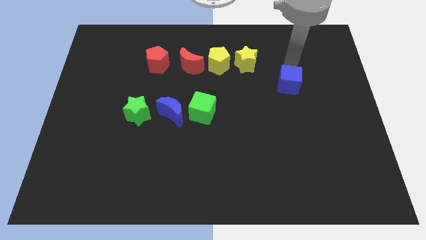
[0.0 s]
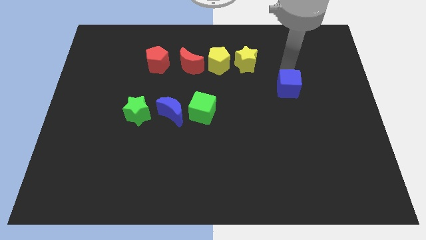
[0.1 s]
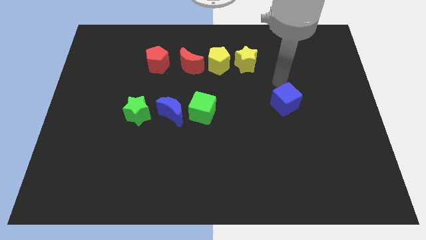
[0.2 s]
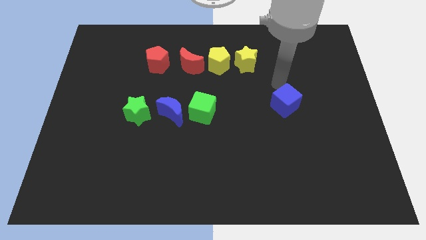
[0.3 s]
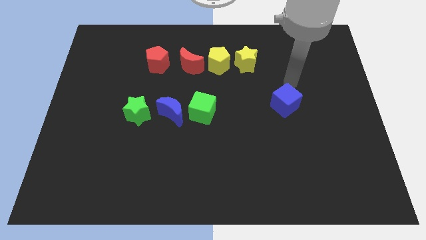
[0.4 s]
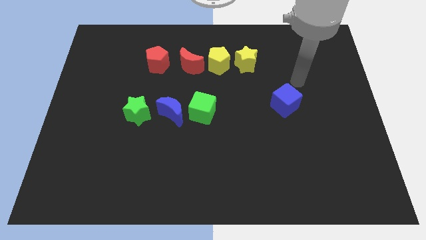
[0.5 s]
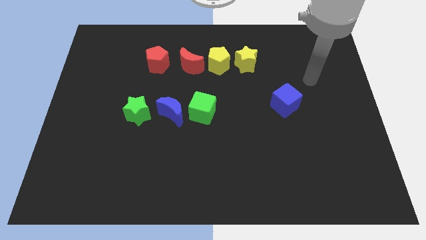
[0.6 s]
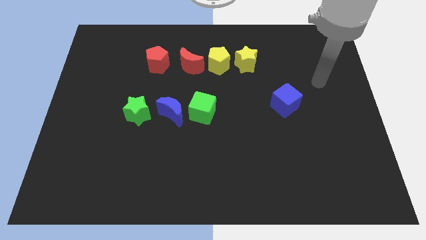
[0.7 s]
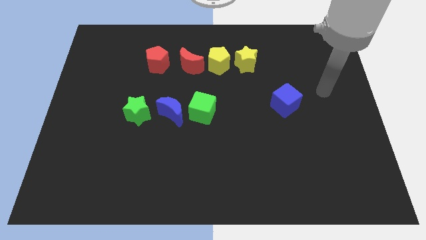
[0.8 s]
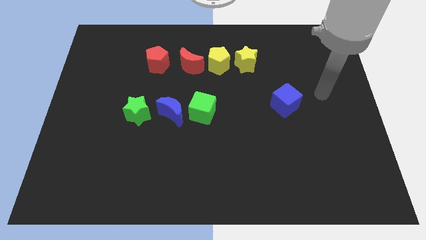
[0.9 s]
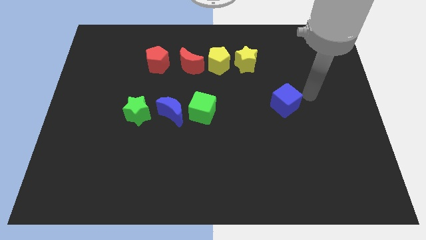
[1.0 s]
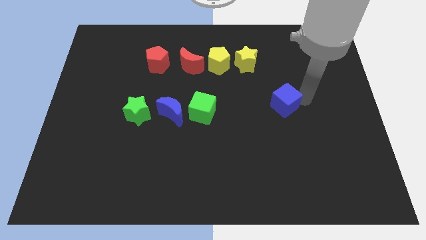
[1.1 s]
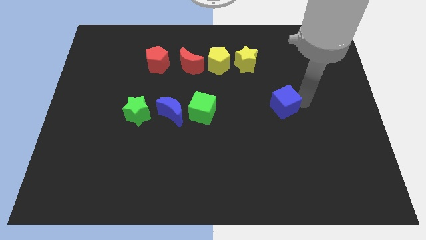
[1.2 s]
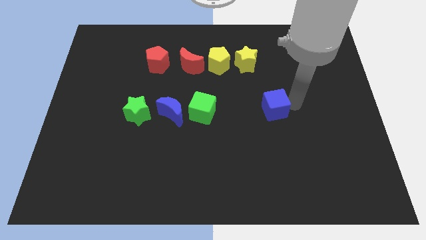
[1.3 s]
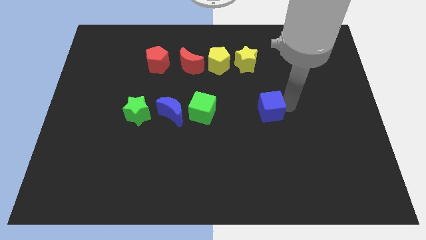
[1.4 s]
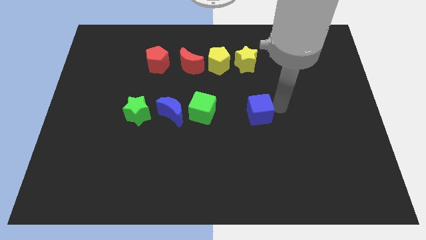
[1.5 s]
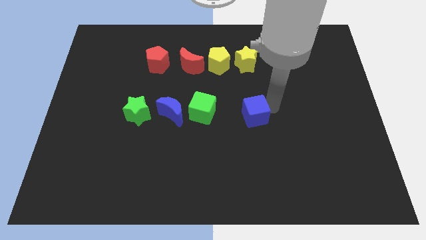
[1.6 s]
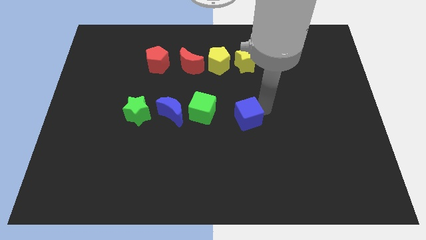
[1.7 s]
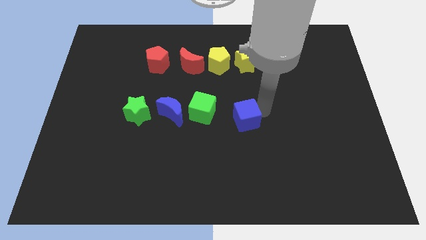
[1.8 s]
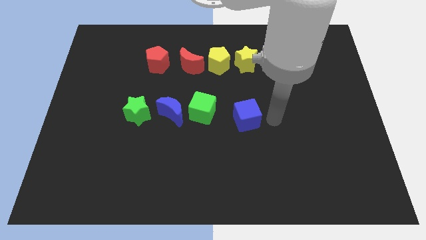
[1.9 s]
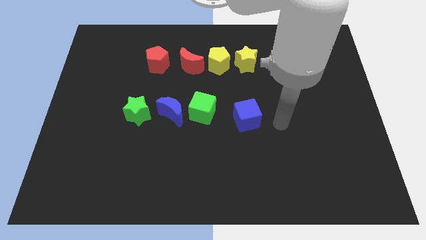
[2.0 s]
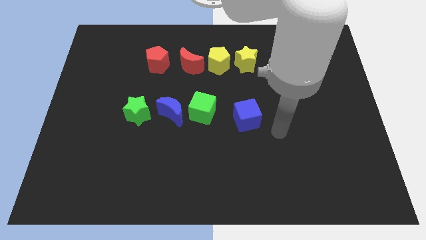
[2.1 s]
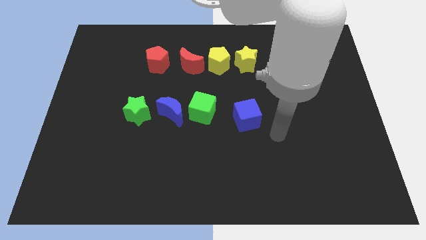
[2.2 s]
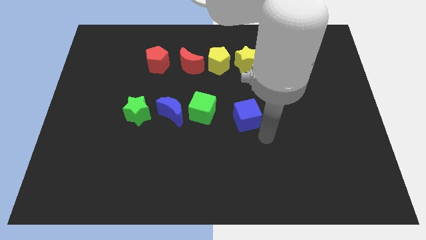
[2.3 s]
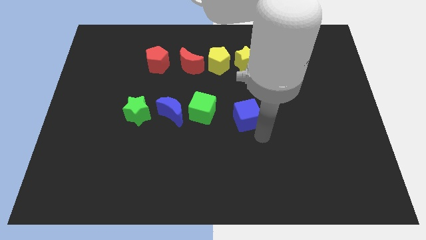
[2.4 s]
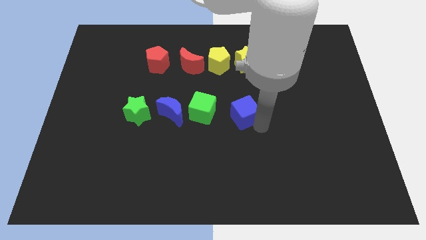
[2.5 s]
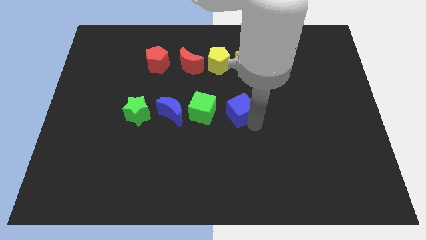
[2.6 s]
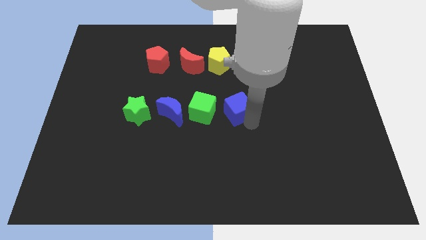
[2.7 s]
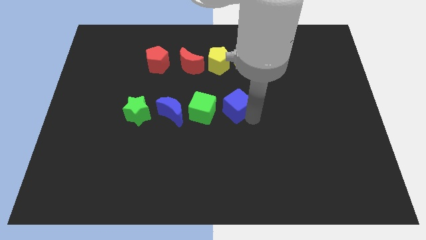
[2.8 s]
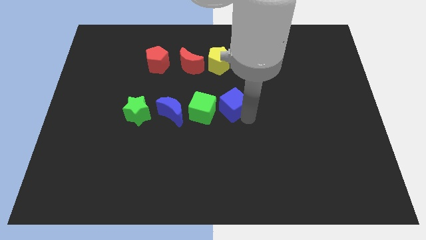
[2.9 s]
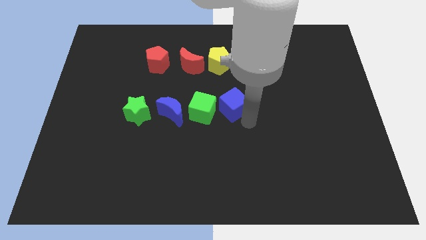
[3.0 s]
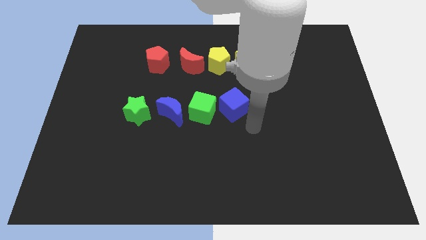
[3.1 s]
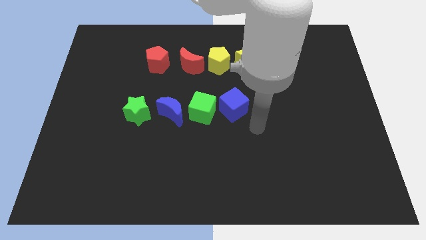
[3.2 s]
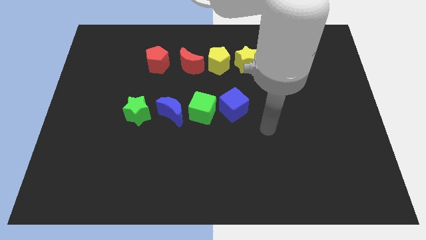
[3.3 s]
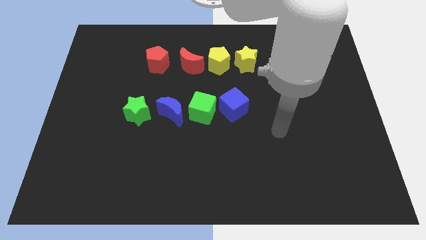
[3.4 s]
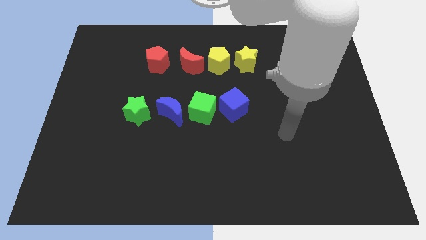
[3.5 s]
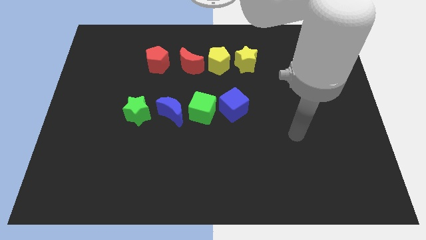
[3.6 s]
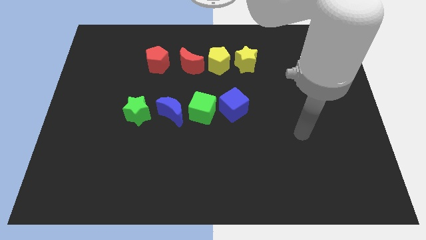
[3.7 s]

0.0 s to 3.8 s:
push the blue cube right of the green cube

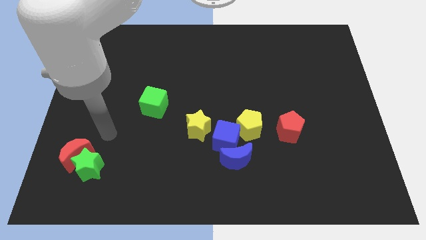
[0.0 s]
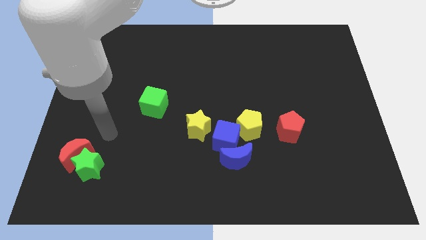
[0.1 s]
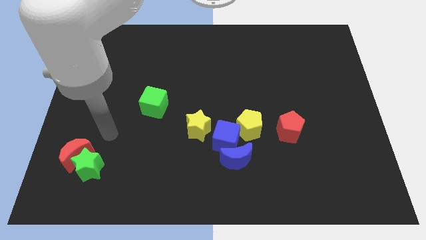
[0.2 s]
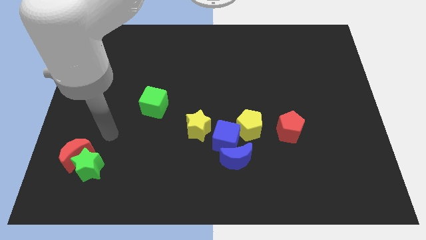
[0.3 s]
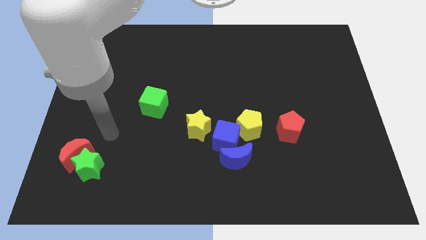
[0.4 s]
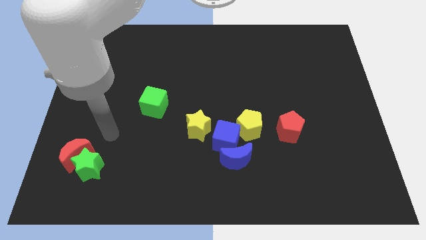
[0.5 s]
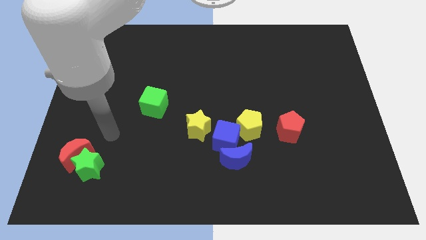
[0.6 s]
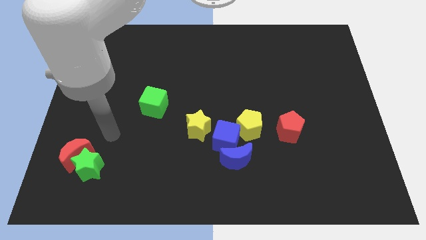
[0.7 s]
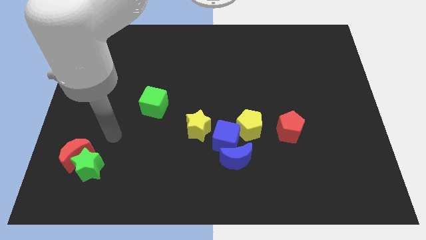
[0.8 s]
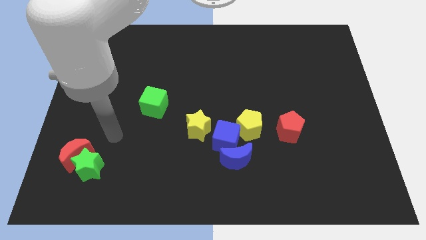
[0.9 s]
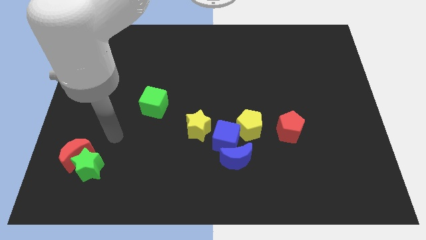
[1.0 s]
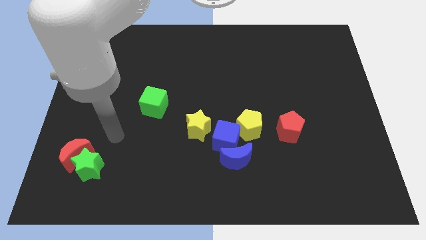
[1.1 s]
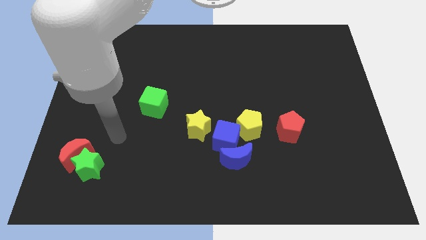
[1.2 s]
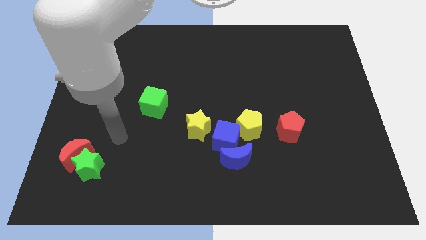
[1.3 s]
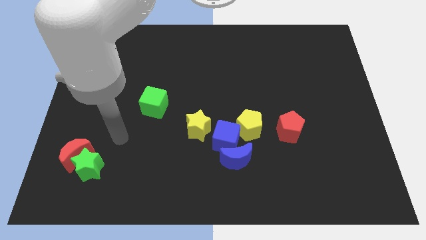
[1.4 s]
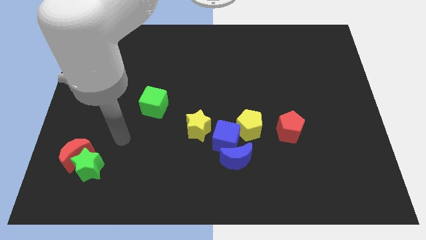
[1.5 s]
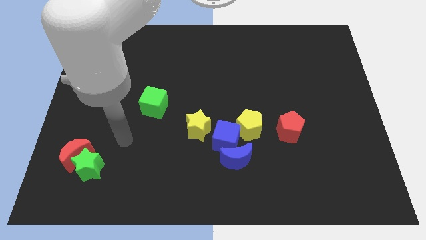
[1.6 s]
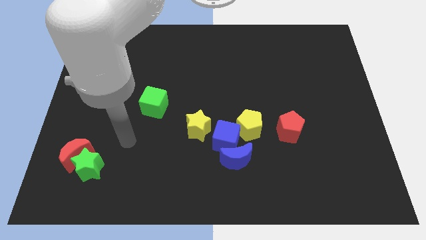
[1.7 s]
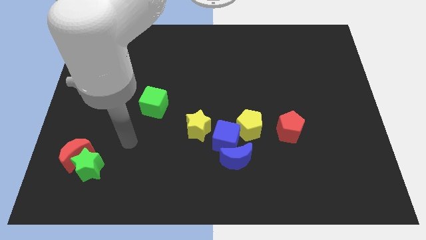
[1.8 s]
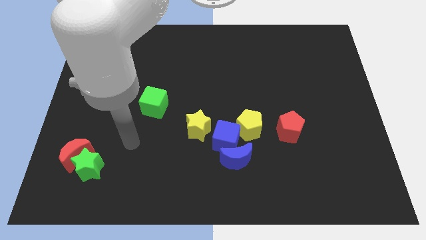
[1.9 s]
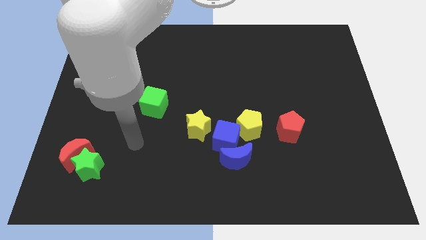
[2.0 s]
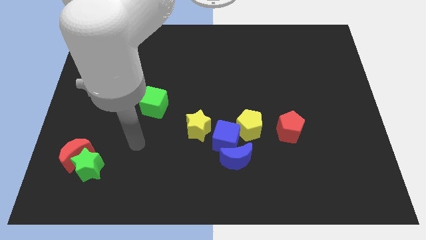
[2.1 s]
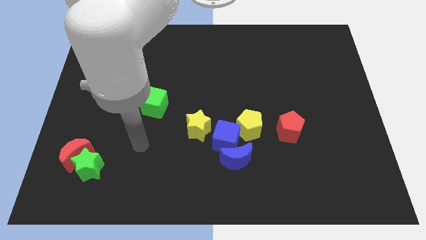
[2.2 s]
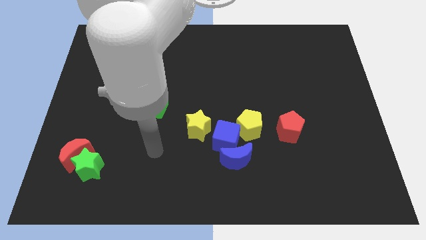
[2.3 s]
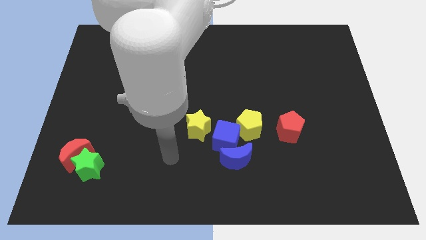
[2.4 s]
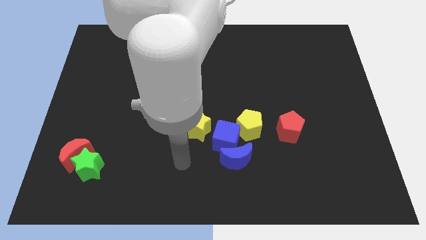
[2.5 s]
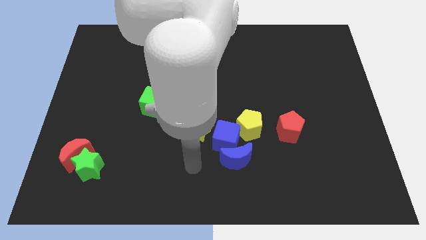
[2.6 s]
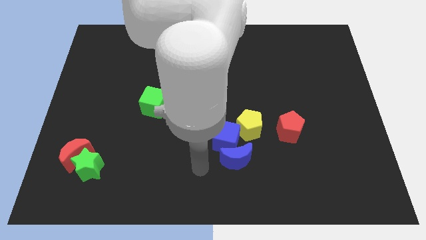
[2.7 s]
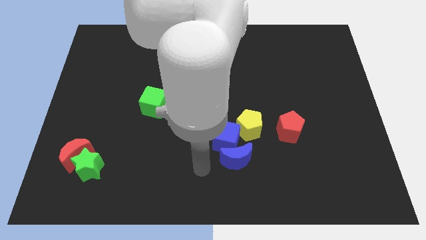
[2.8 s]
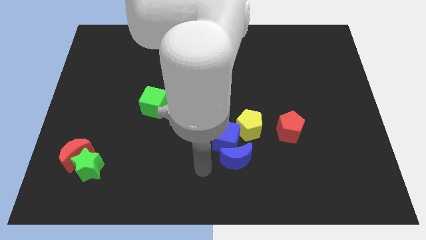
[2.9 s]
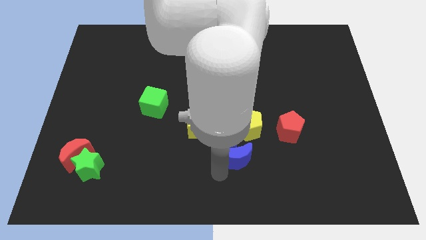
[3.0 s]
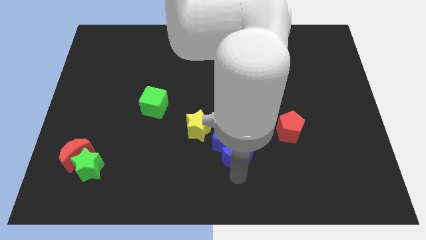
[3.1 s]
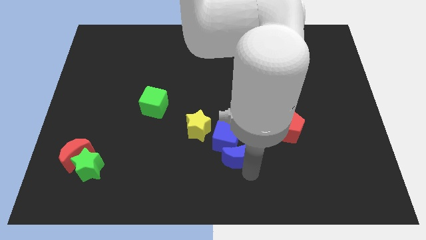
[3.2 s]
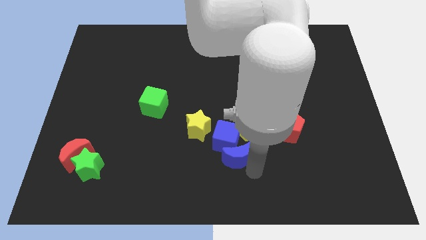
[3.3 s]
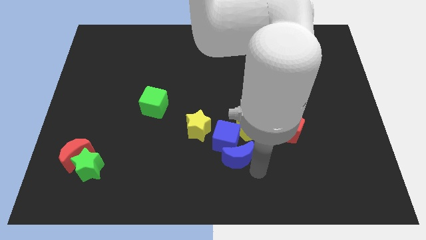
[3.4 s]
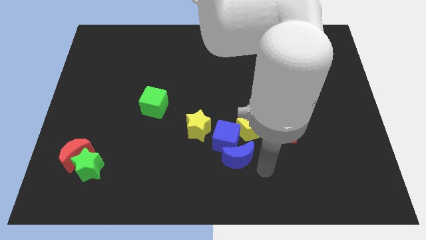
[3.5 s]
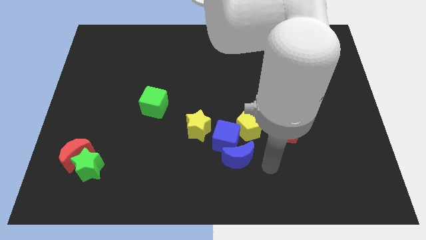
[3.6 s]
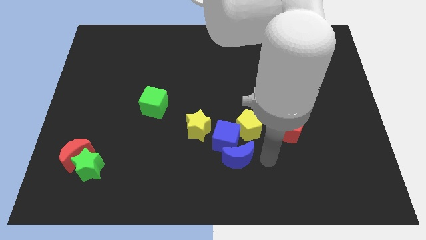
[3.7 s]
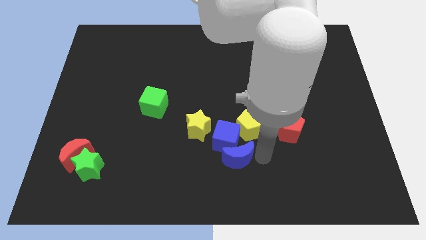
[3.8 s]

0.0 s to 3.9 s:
move your arm close to the blue moon

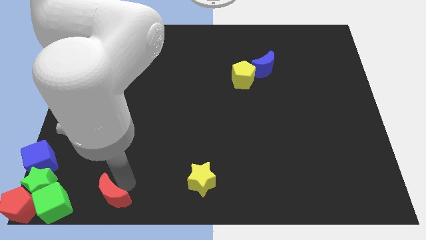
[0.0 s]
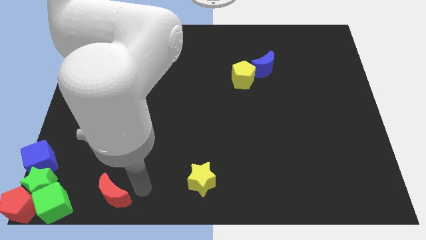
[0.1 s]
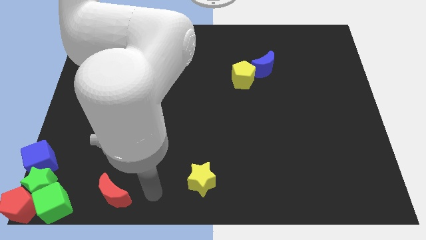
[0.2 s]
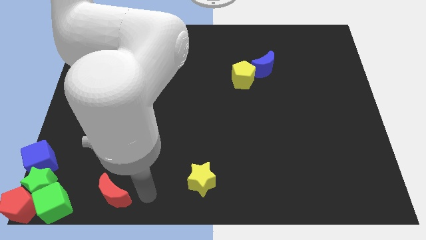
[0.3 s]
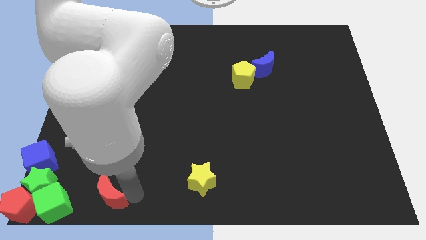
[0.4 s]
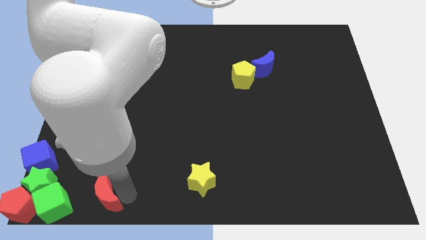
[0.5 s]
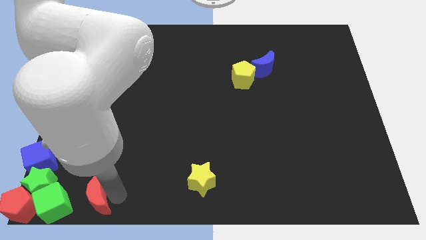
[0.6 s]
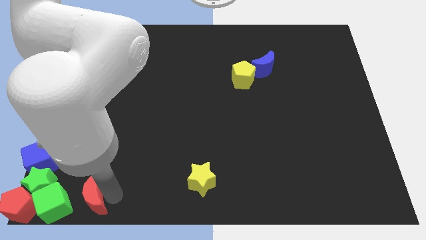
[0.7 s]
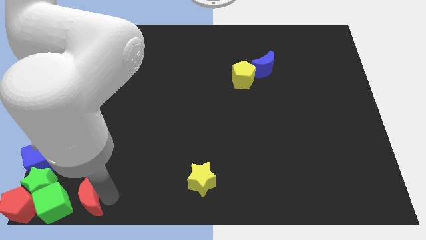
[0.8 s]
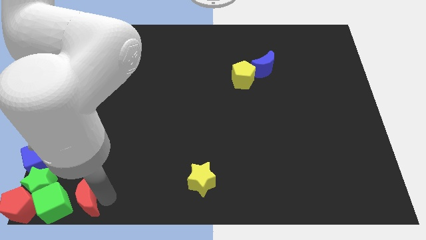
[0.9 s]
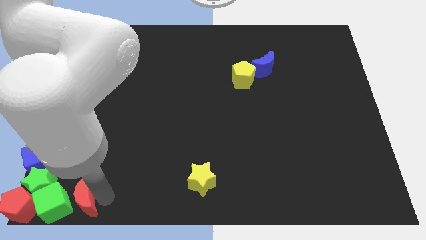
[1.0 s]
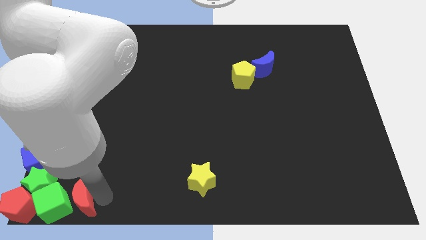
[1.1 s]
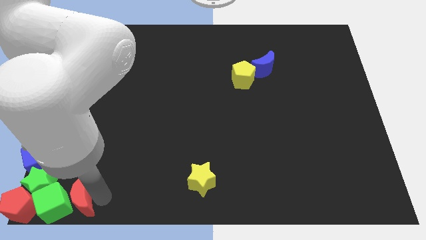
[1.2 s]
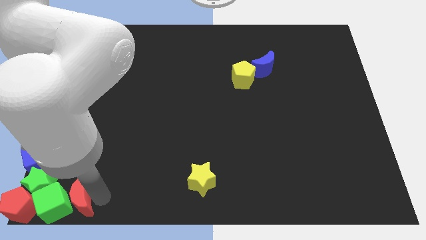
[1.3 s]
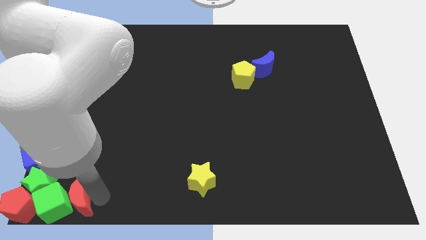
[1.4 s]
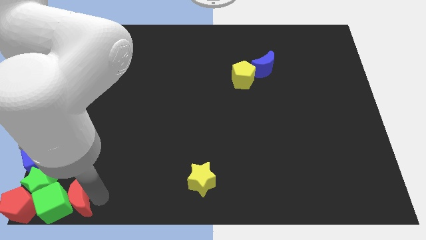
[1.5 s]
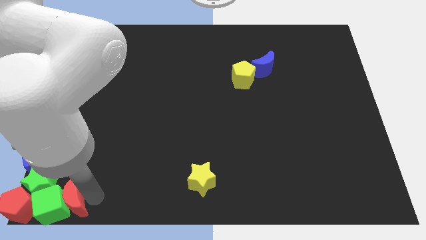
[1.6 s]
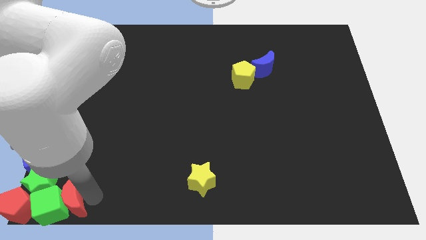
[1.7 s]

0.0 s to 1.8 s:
push the red crescent into the green cube
